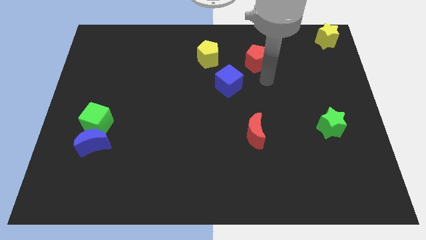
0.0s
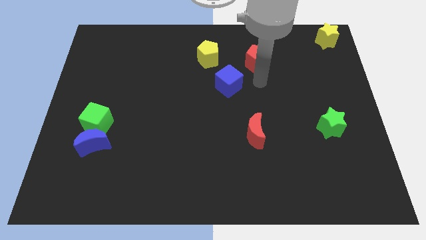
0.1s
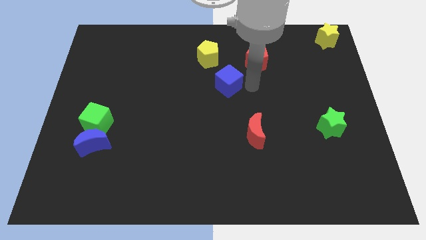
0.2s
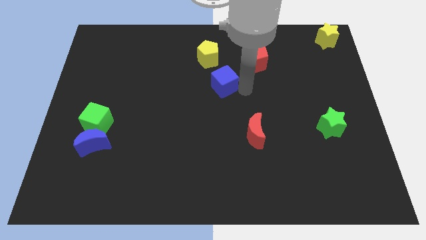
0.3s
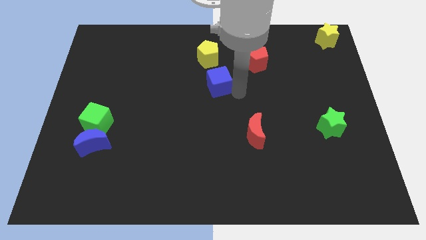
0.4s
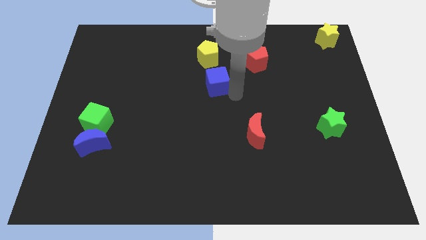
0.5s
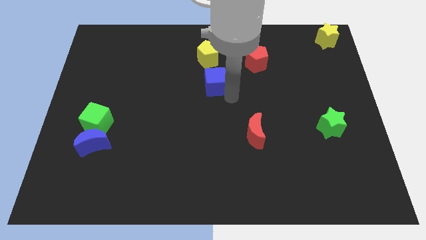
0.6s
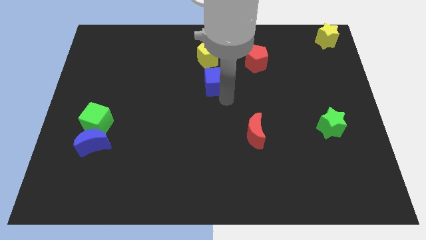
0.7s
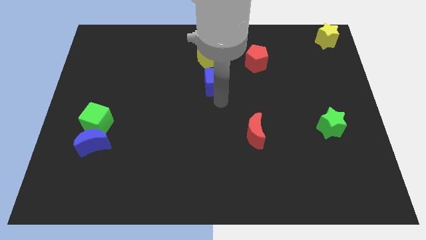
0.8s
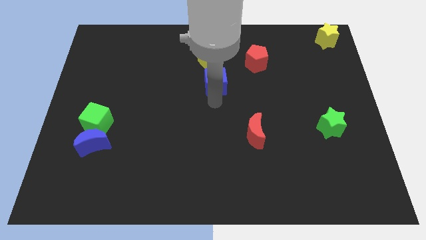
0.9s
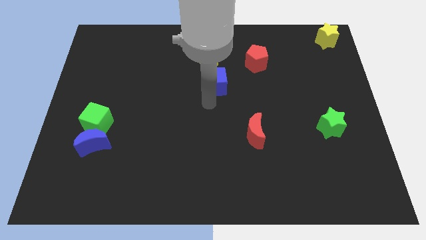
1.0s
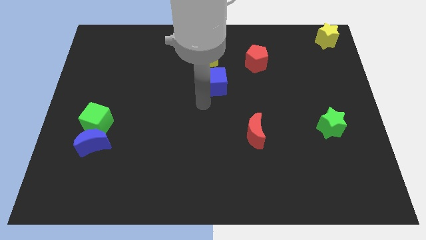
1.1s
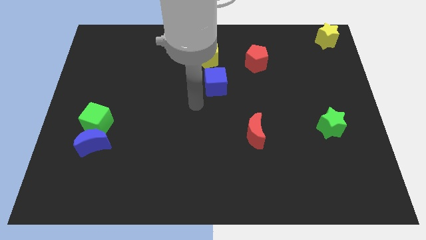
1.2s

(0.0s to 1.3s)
place the blue cube below the yellow pentagon

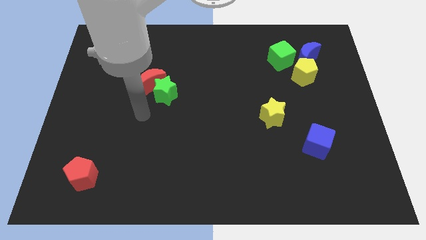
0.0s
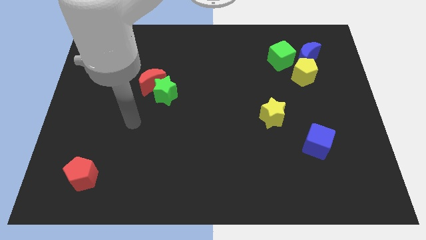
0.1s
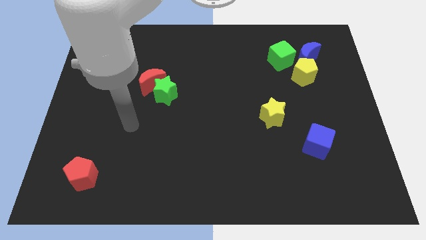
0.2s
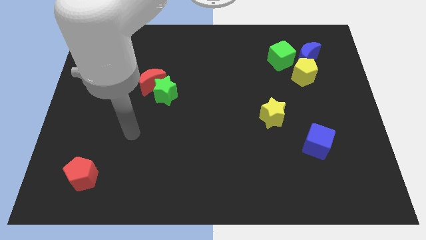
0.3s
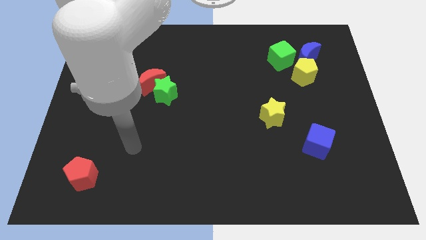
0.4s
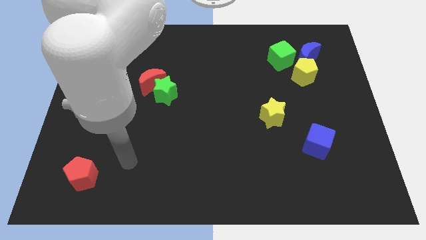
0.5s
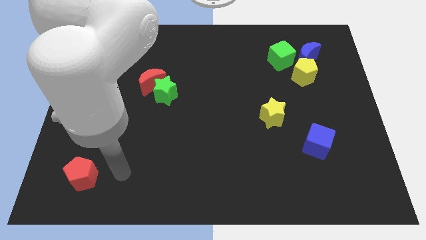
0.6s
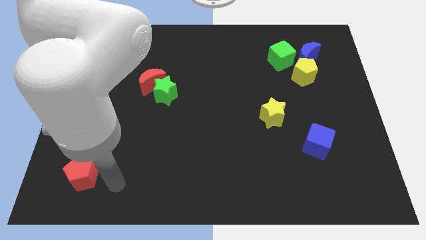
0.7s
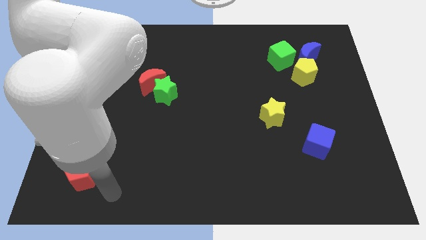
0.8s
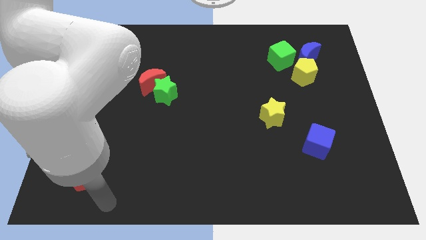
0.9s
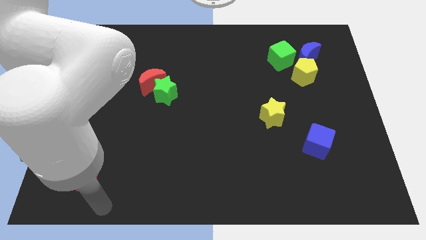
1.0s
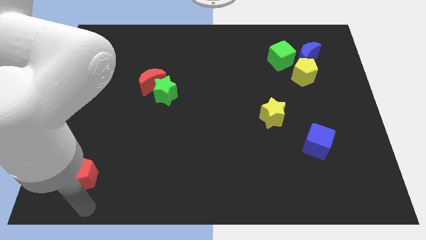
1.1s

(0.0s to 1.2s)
move the arm below the red pentagon

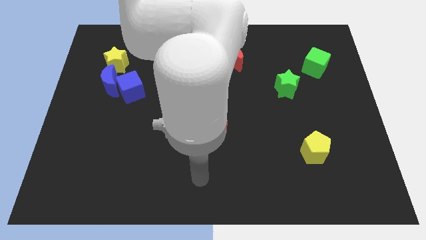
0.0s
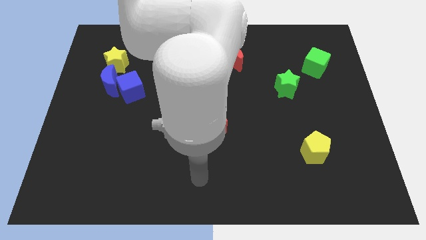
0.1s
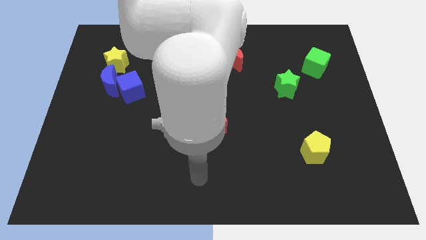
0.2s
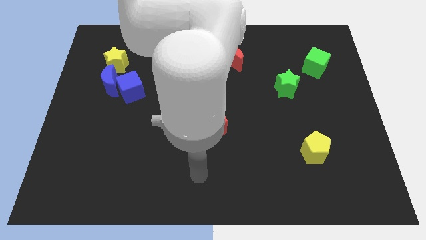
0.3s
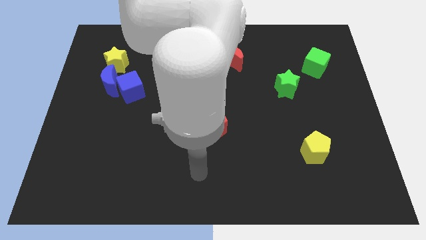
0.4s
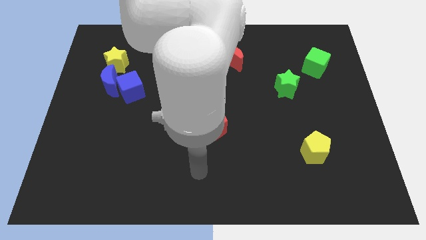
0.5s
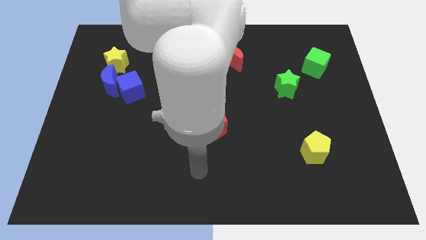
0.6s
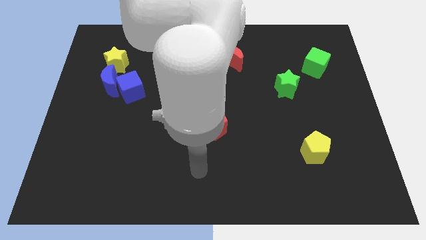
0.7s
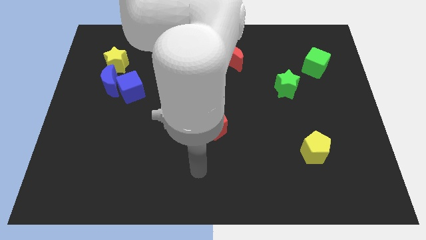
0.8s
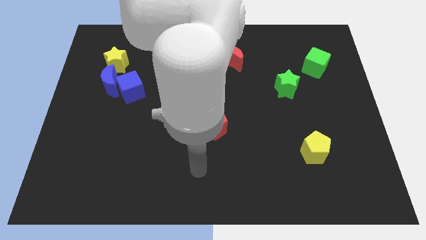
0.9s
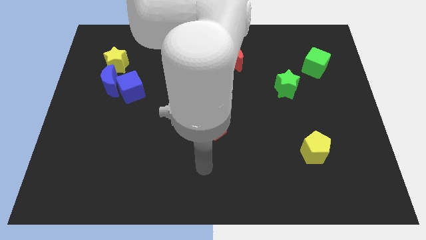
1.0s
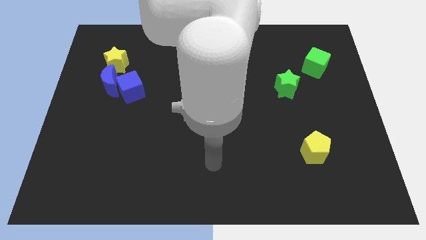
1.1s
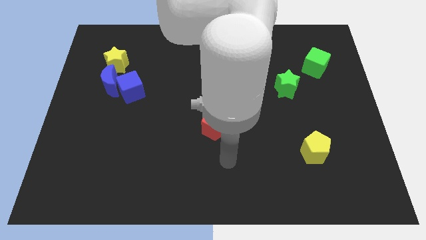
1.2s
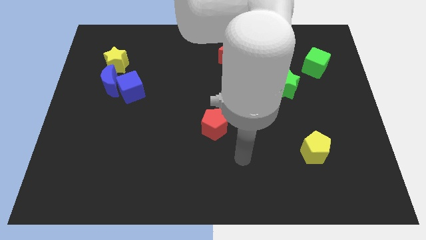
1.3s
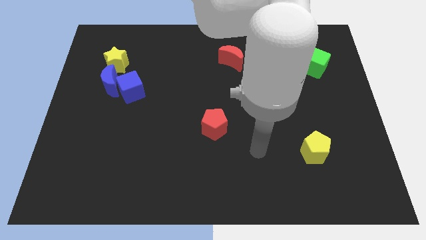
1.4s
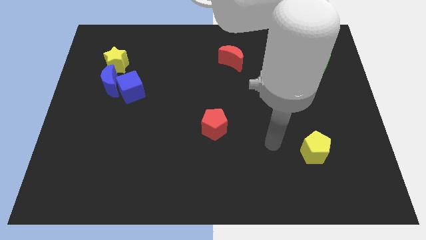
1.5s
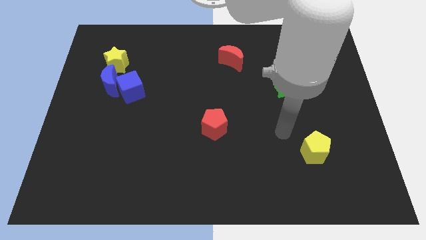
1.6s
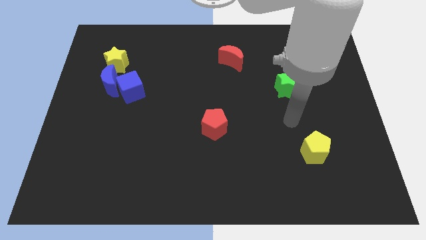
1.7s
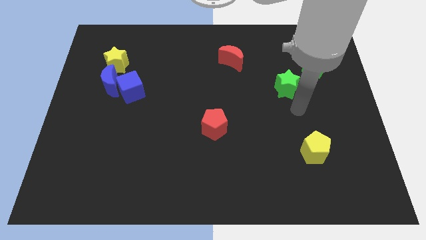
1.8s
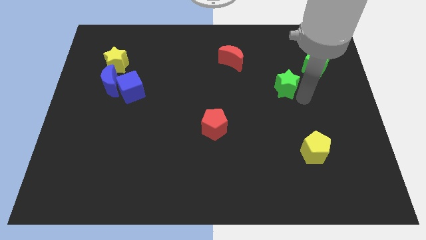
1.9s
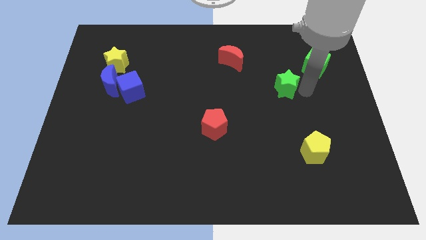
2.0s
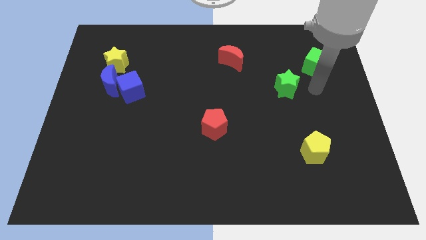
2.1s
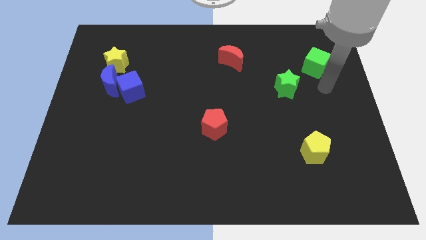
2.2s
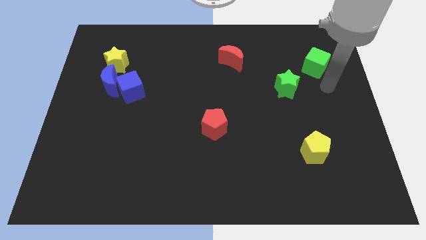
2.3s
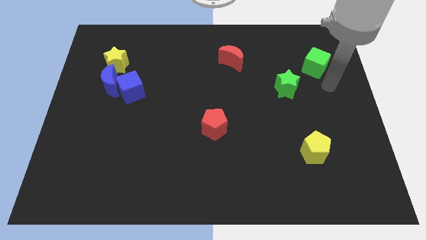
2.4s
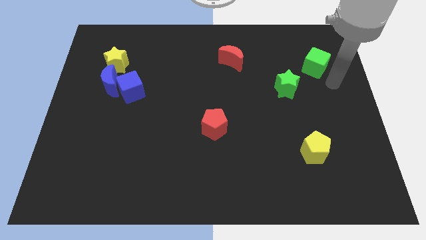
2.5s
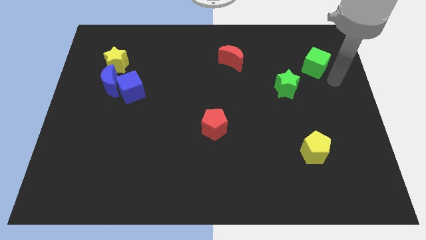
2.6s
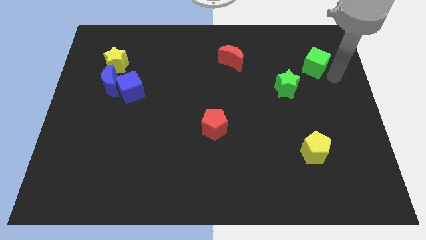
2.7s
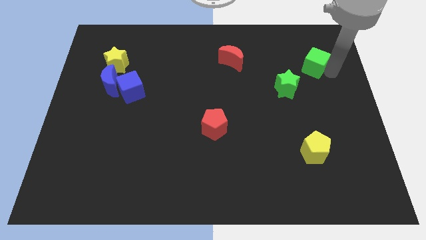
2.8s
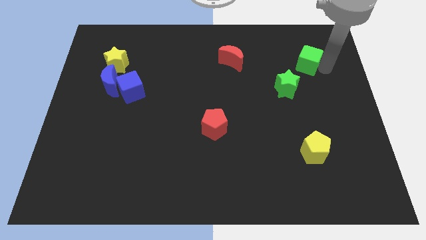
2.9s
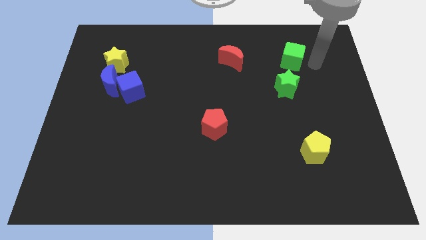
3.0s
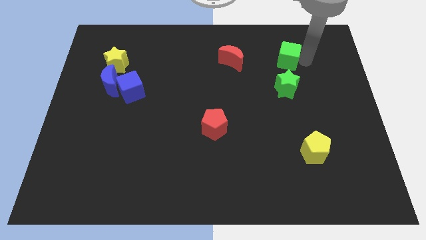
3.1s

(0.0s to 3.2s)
move the green cube to the top side of the green star

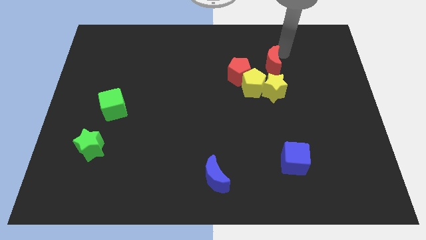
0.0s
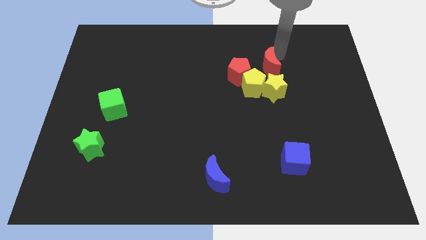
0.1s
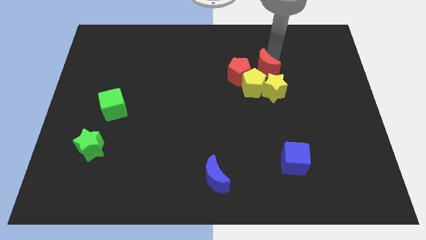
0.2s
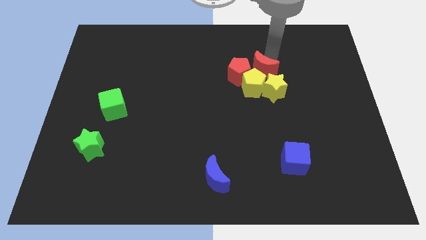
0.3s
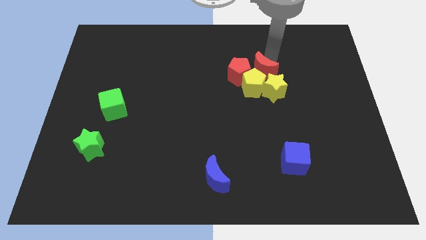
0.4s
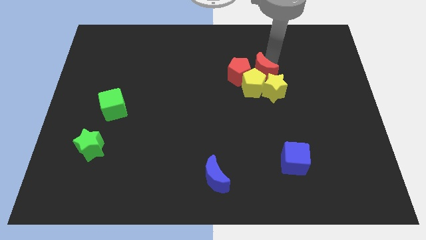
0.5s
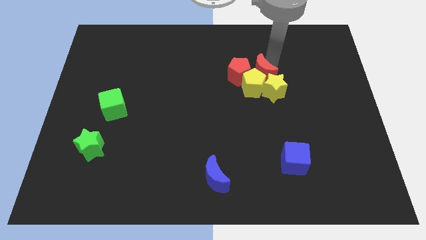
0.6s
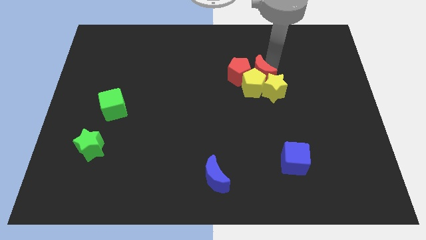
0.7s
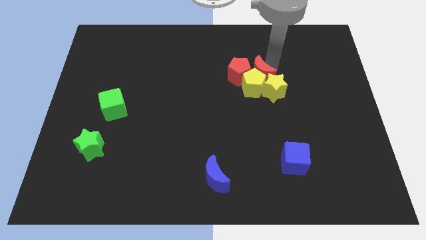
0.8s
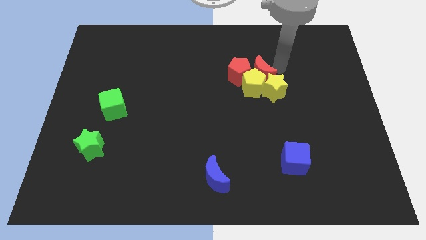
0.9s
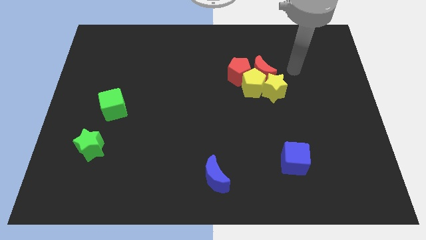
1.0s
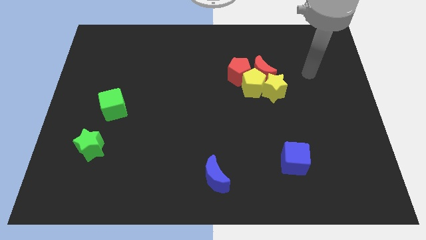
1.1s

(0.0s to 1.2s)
move the red moon close to the yellow pentagon

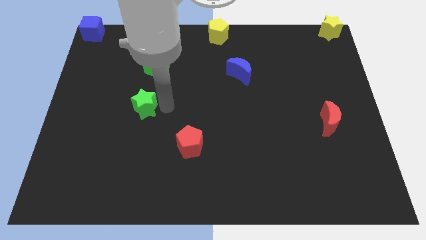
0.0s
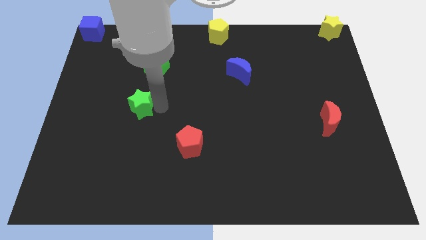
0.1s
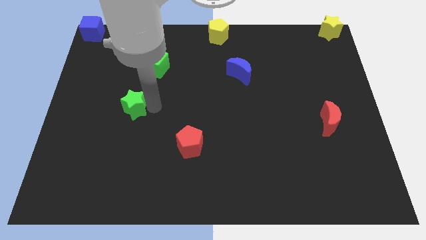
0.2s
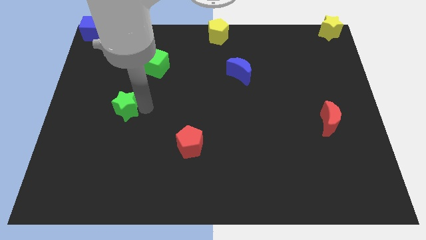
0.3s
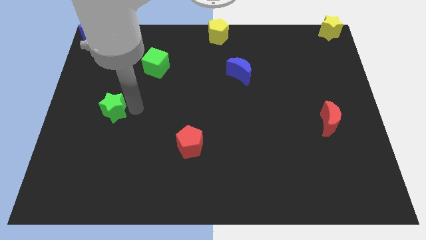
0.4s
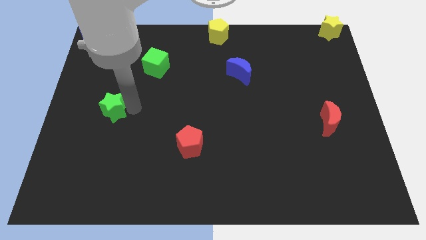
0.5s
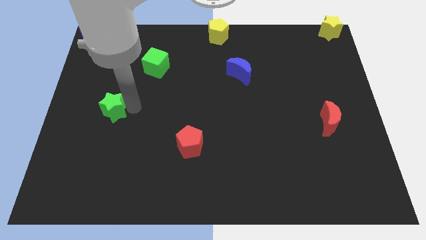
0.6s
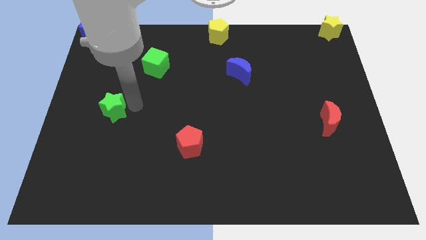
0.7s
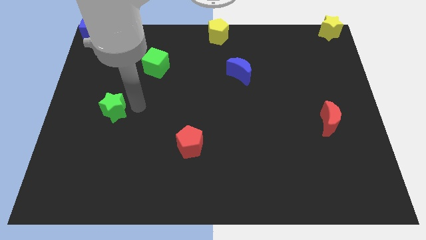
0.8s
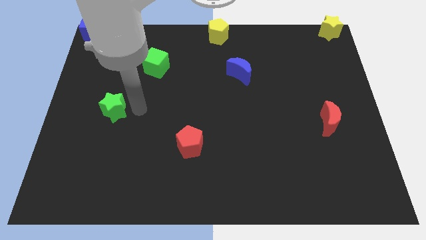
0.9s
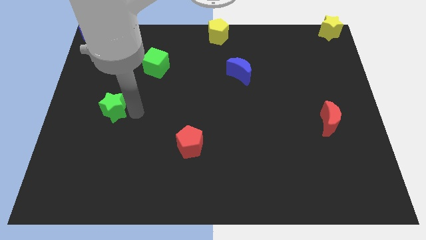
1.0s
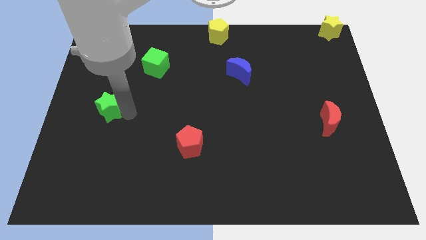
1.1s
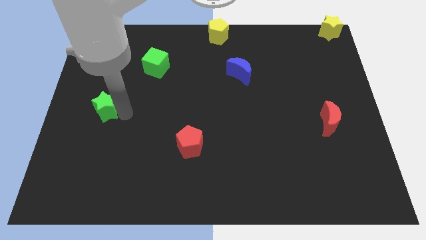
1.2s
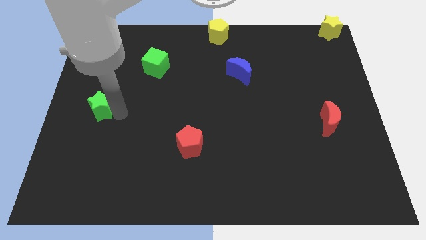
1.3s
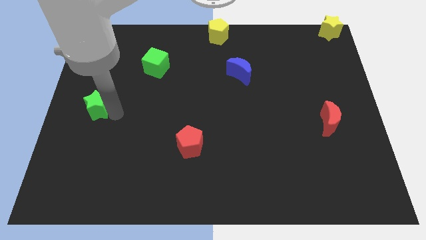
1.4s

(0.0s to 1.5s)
push the green star to the left centre of the board

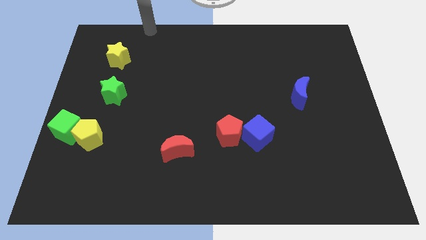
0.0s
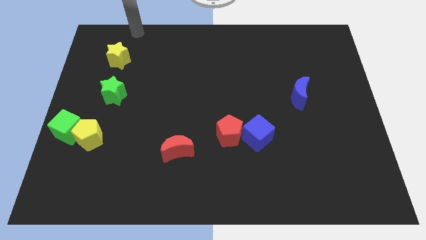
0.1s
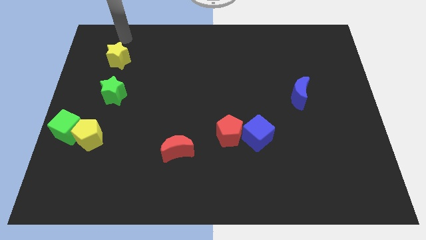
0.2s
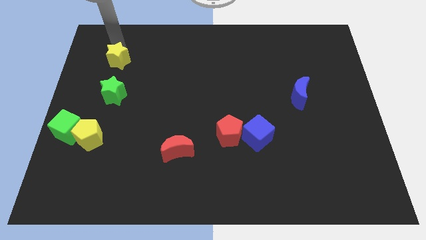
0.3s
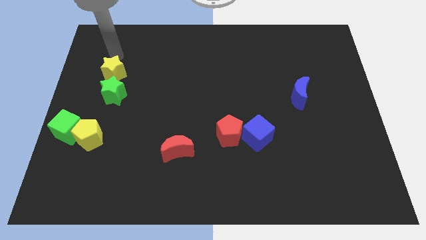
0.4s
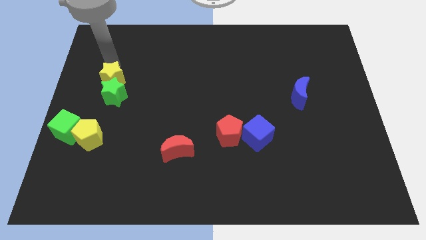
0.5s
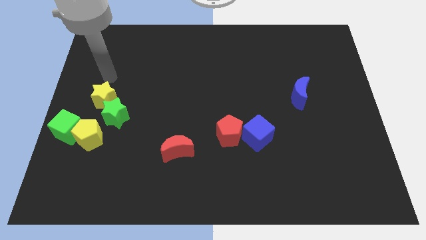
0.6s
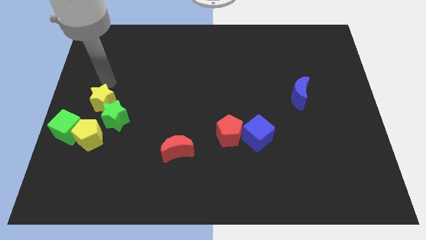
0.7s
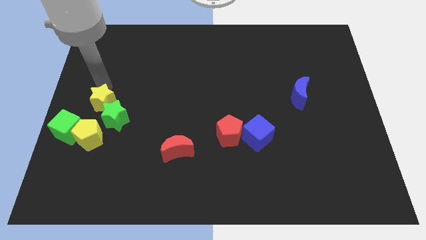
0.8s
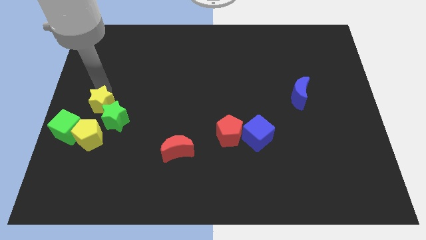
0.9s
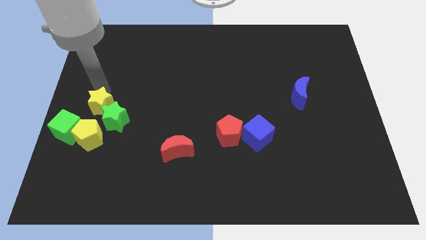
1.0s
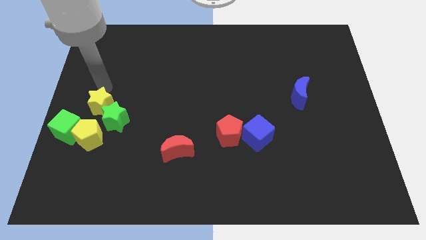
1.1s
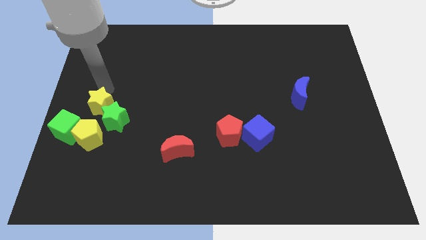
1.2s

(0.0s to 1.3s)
push the yellow star to the left of the green star
